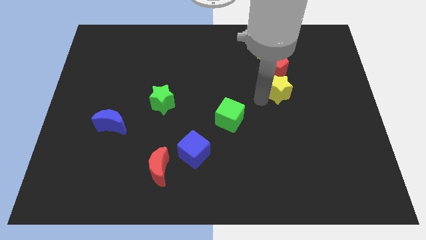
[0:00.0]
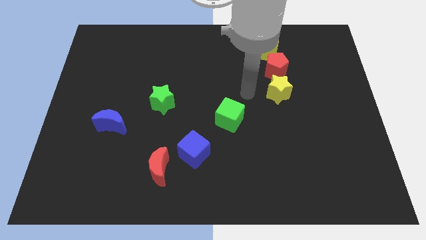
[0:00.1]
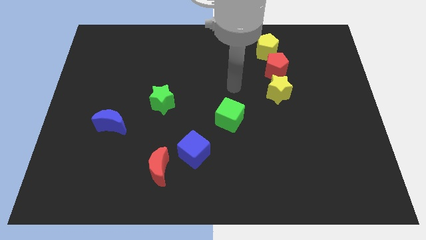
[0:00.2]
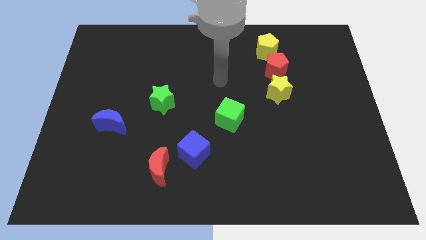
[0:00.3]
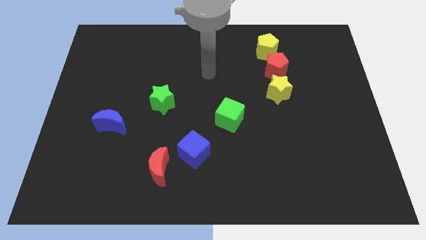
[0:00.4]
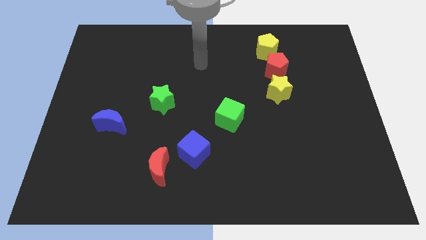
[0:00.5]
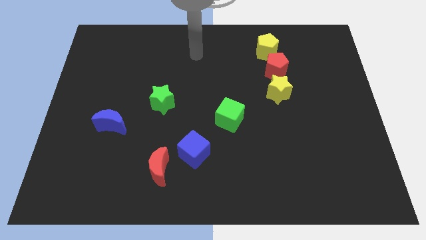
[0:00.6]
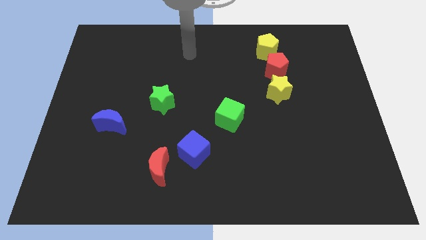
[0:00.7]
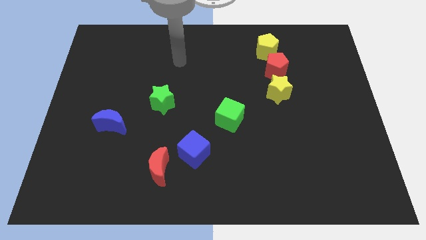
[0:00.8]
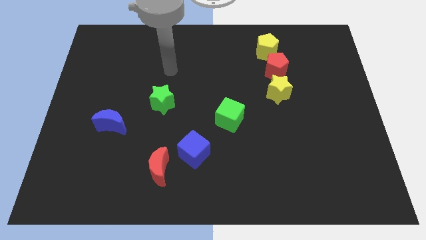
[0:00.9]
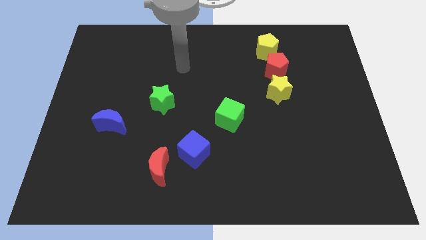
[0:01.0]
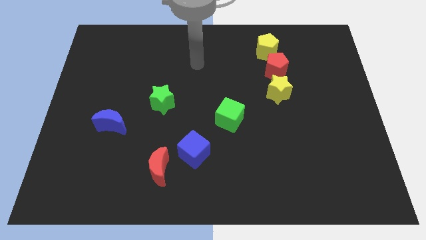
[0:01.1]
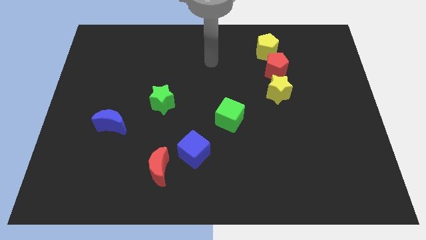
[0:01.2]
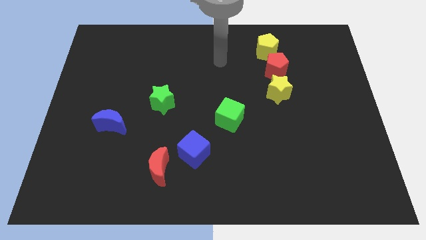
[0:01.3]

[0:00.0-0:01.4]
move the arm away from the yellow star

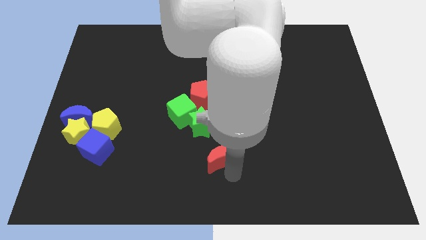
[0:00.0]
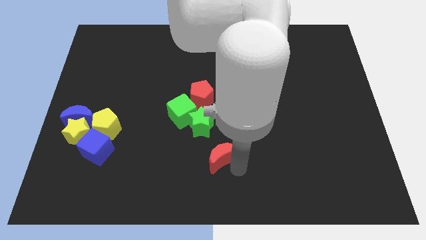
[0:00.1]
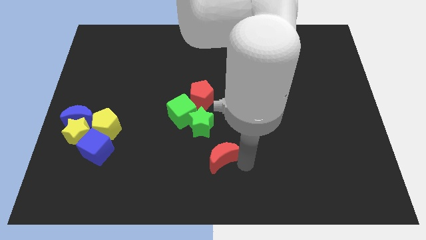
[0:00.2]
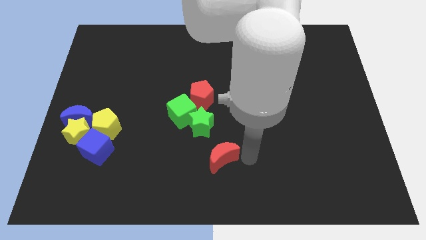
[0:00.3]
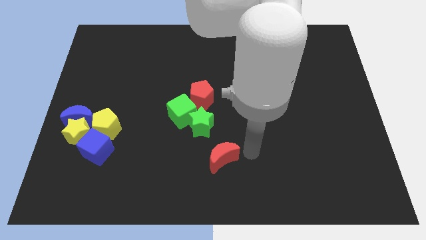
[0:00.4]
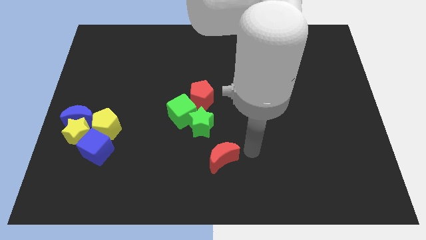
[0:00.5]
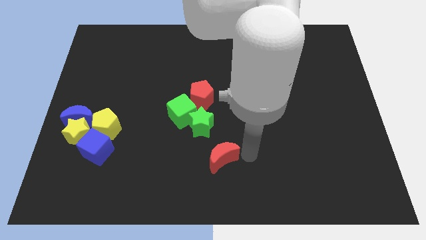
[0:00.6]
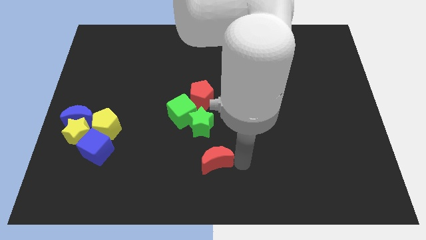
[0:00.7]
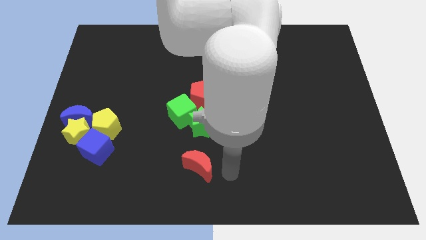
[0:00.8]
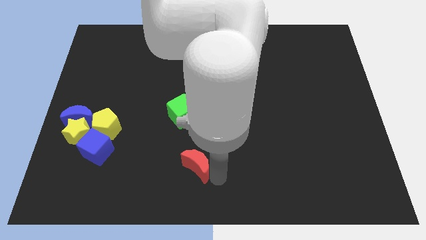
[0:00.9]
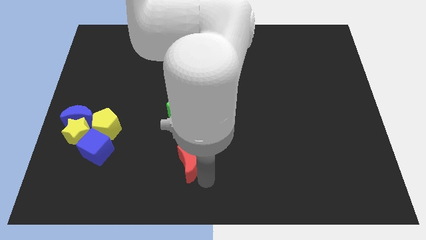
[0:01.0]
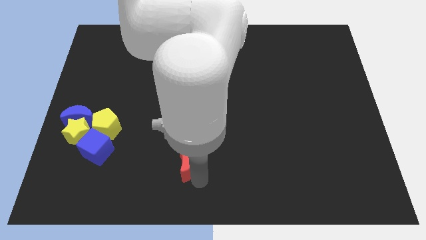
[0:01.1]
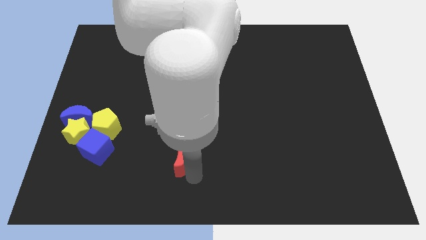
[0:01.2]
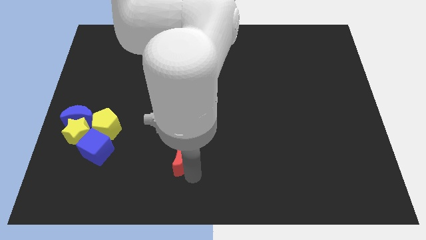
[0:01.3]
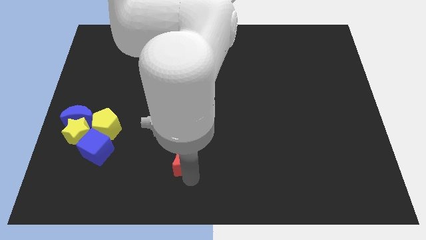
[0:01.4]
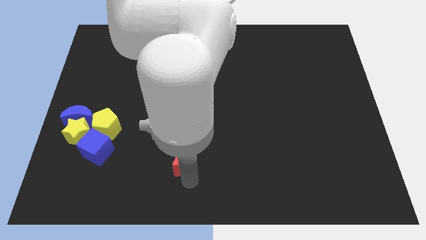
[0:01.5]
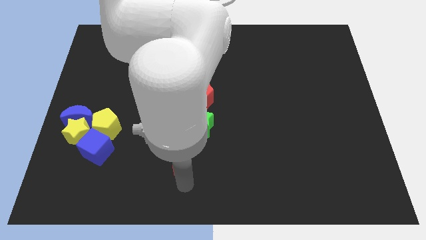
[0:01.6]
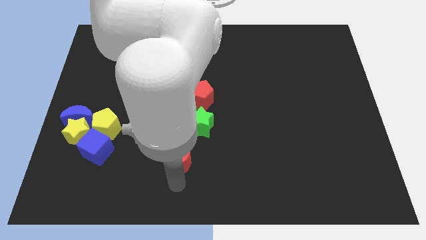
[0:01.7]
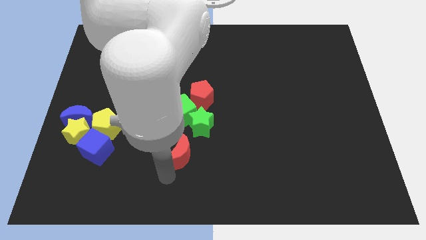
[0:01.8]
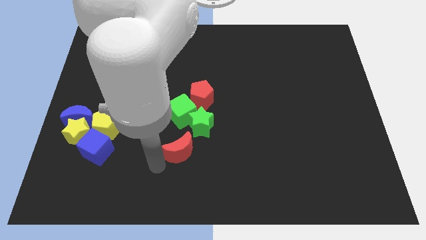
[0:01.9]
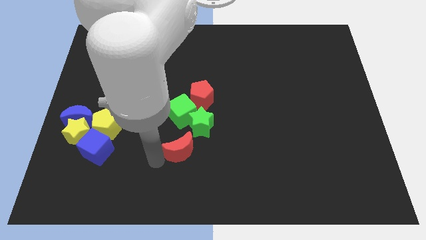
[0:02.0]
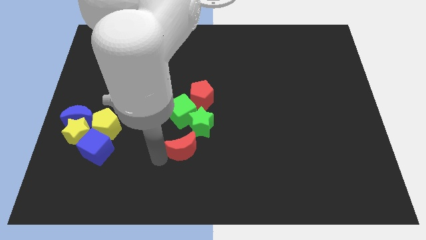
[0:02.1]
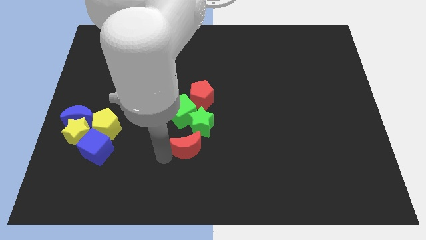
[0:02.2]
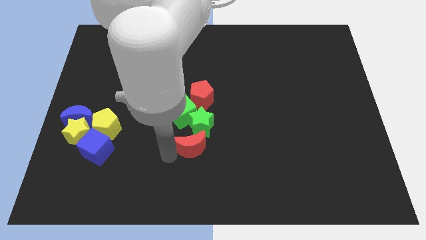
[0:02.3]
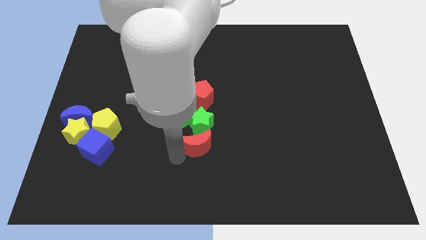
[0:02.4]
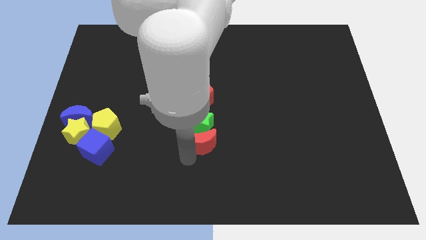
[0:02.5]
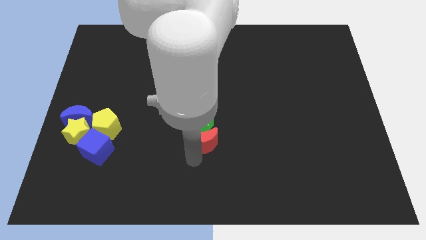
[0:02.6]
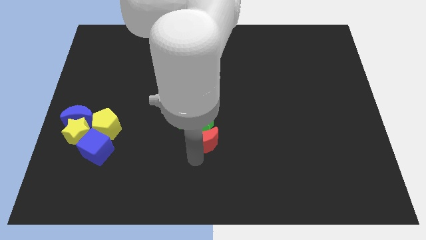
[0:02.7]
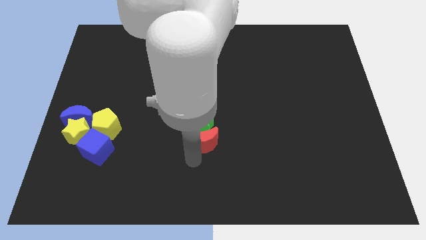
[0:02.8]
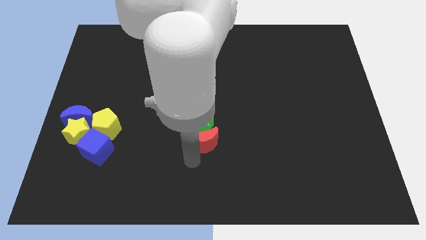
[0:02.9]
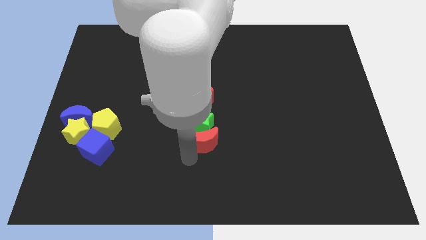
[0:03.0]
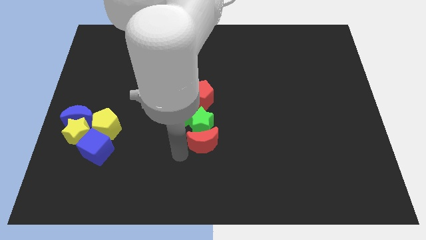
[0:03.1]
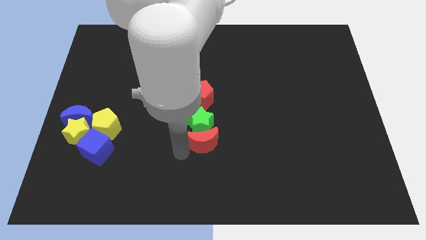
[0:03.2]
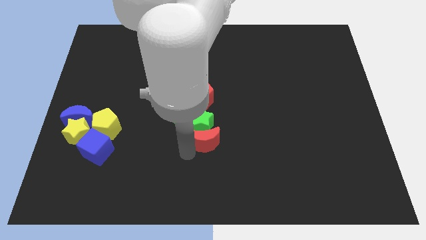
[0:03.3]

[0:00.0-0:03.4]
put the red moon to the bottom side of the greens tar

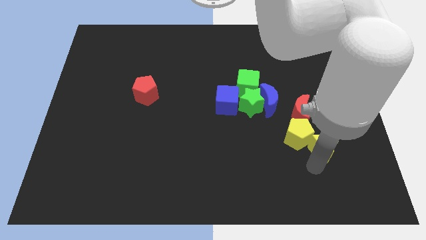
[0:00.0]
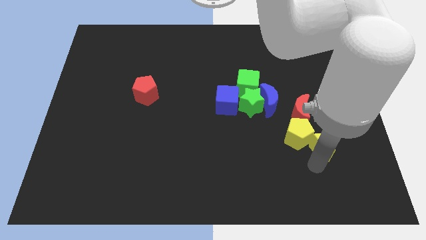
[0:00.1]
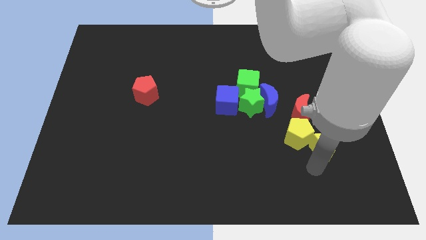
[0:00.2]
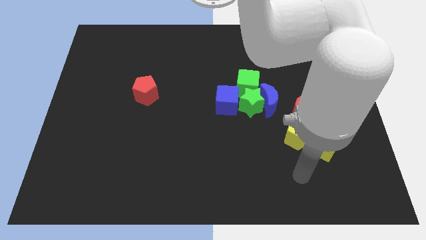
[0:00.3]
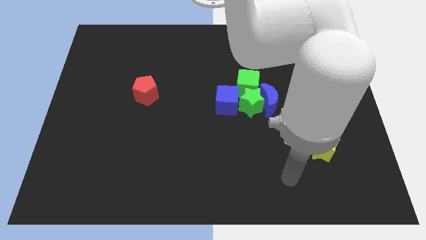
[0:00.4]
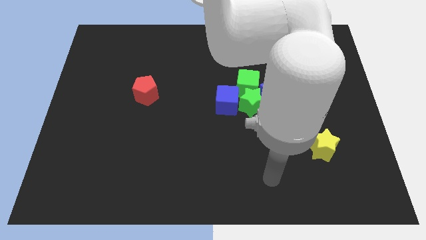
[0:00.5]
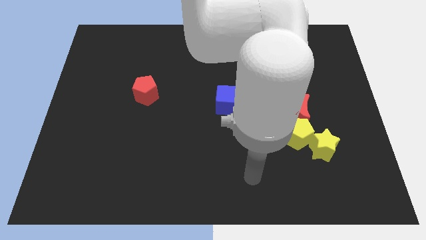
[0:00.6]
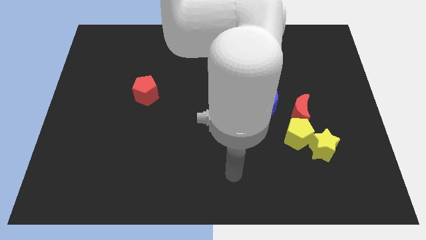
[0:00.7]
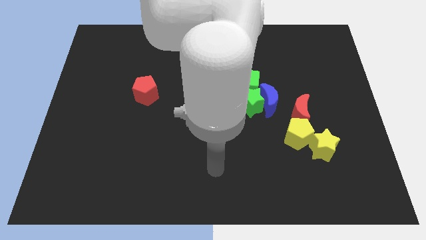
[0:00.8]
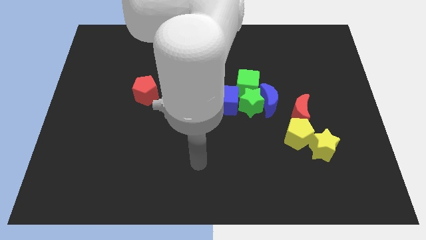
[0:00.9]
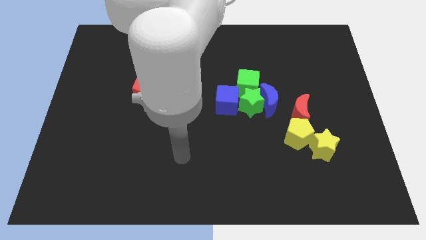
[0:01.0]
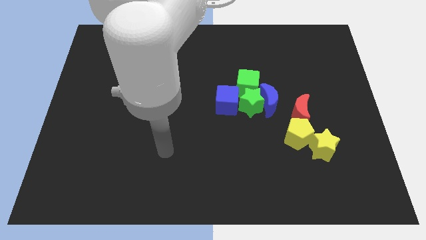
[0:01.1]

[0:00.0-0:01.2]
move your arm away from the yellow star

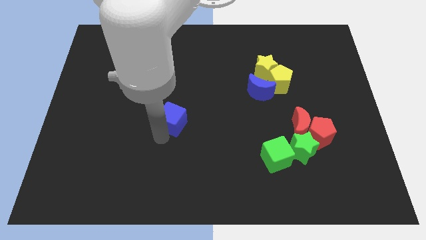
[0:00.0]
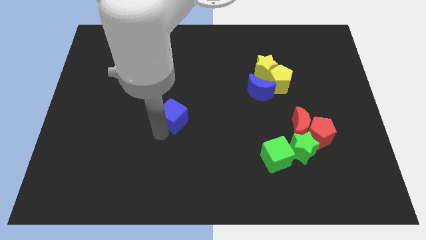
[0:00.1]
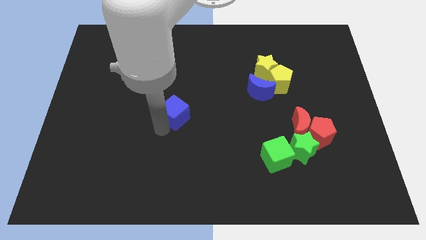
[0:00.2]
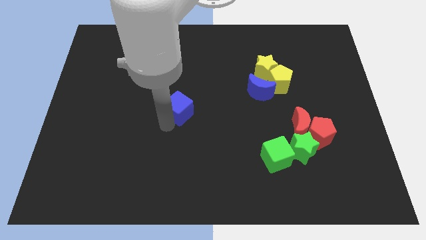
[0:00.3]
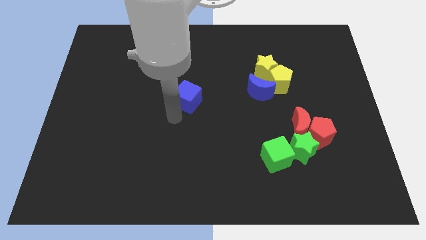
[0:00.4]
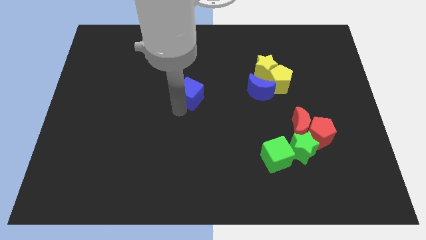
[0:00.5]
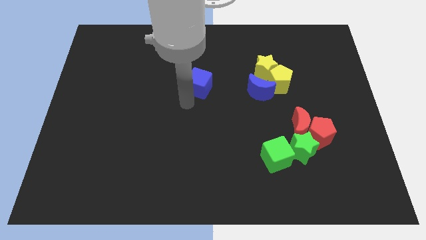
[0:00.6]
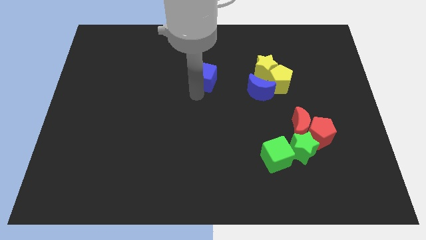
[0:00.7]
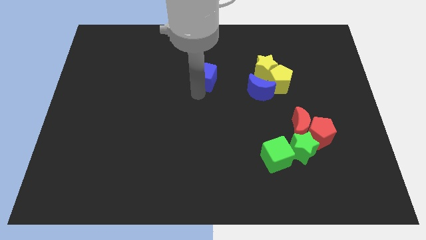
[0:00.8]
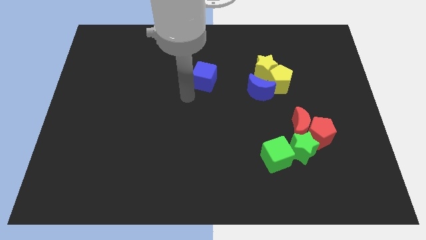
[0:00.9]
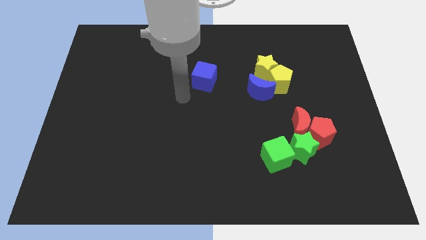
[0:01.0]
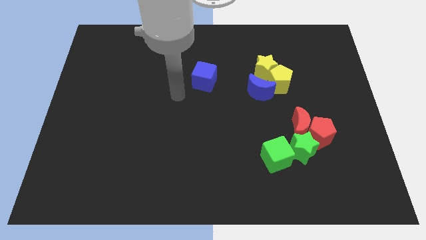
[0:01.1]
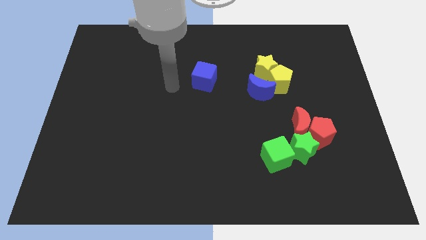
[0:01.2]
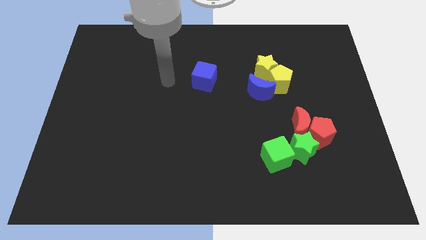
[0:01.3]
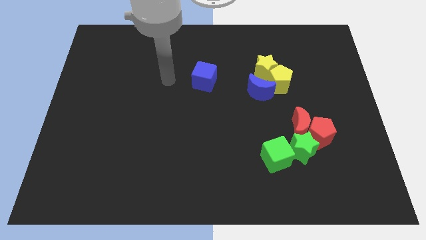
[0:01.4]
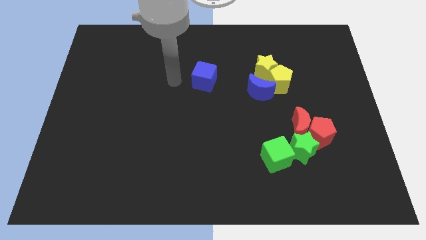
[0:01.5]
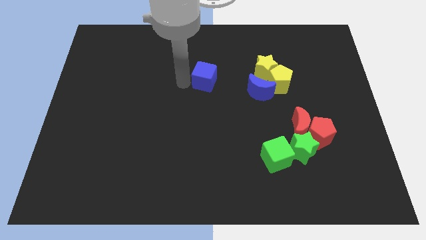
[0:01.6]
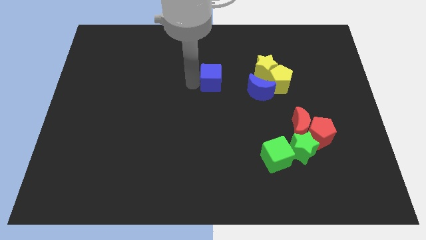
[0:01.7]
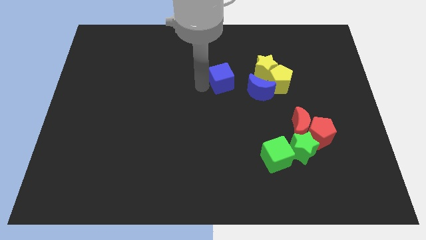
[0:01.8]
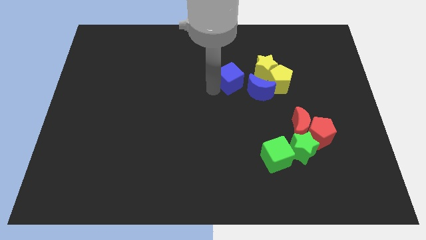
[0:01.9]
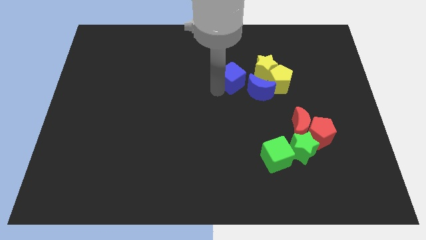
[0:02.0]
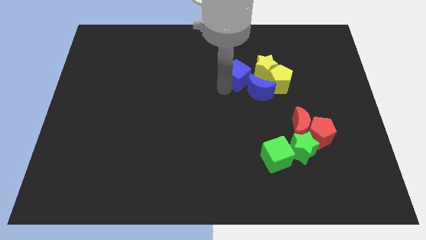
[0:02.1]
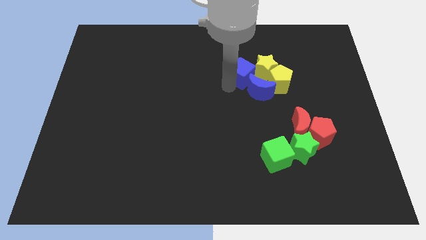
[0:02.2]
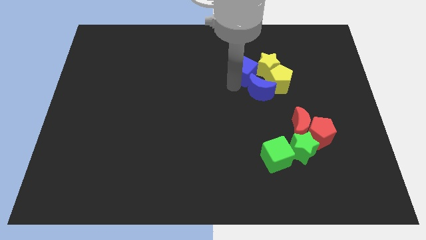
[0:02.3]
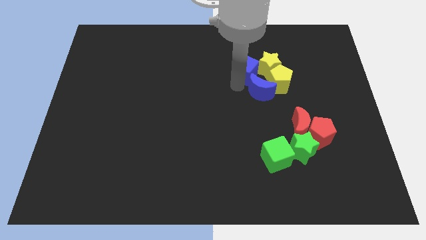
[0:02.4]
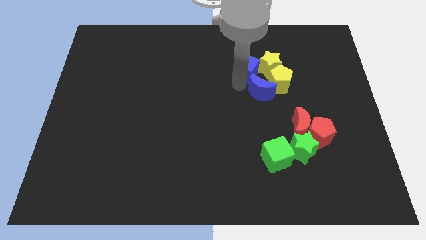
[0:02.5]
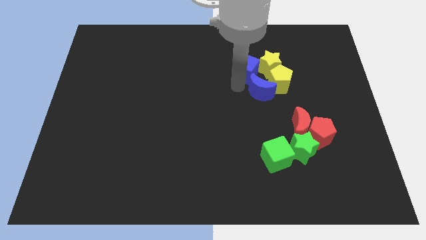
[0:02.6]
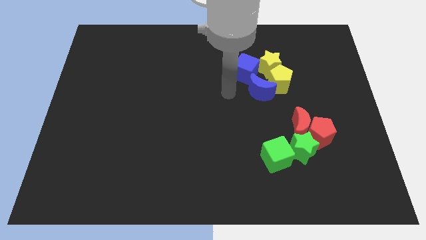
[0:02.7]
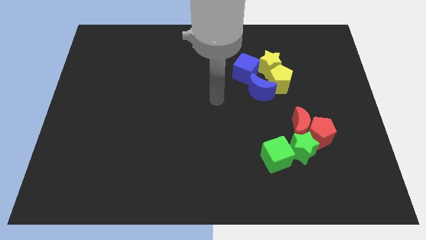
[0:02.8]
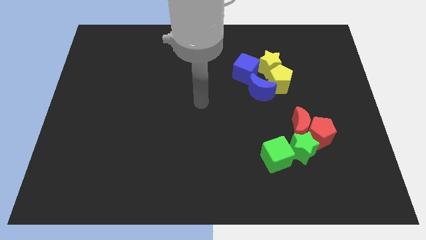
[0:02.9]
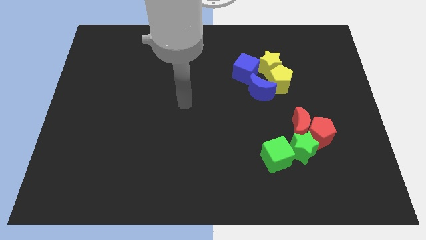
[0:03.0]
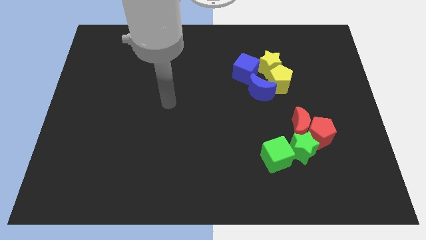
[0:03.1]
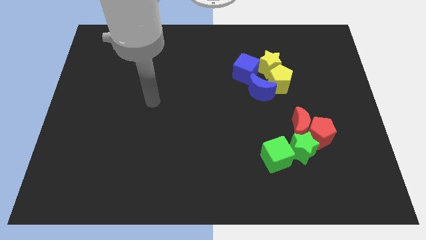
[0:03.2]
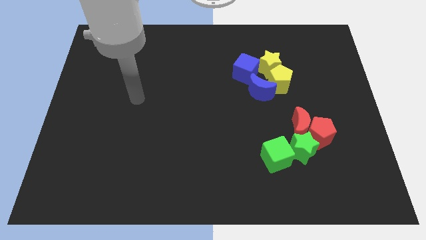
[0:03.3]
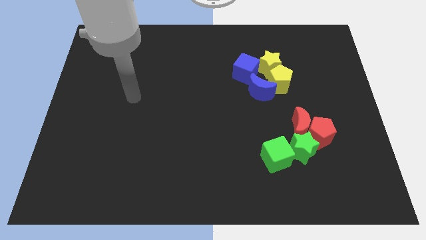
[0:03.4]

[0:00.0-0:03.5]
move the blue cube into the yellow star
